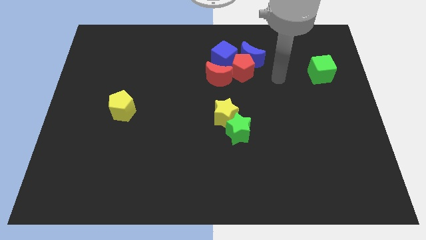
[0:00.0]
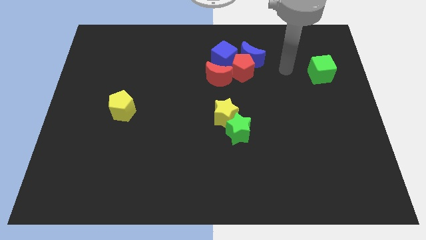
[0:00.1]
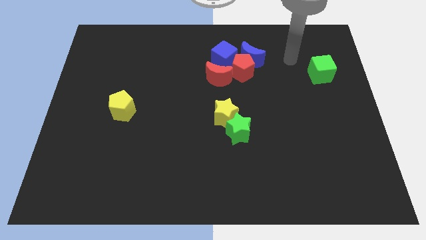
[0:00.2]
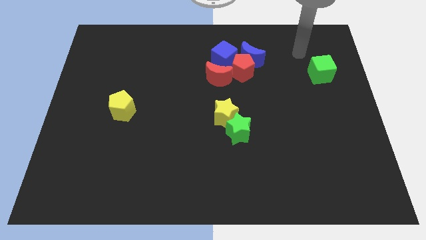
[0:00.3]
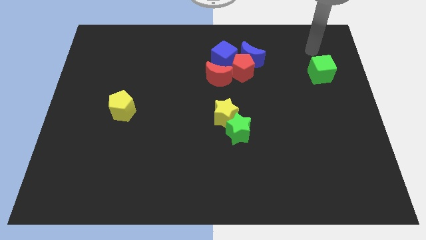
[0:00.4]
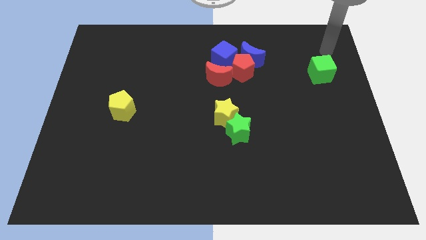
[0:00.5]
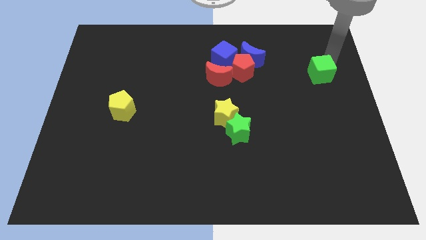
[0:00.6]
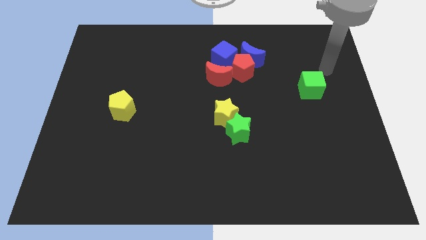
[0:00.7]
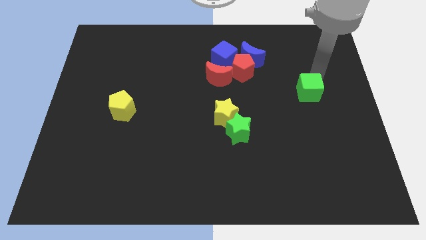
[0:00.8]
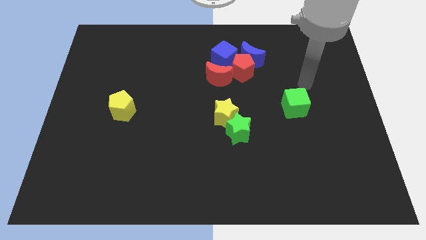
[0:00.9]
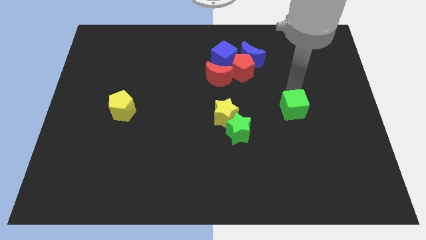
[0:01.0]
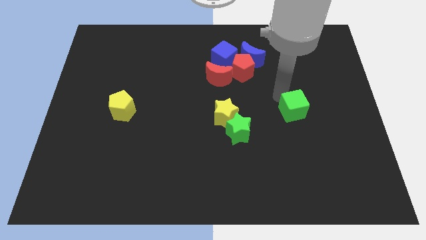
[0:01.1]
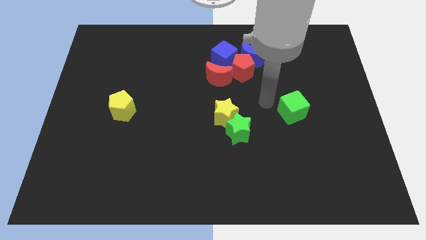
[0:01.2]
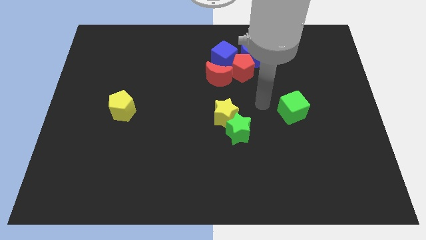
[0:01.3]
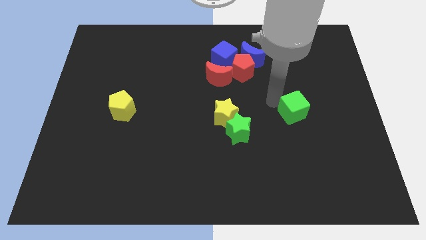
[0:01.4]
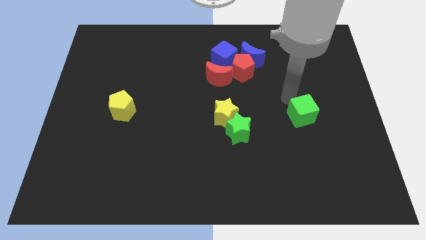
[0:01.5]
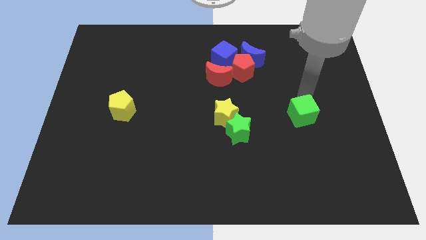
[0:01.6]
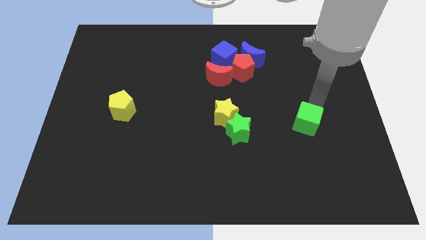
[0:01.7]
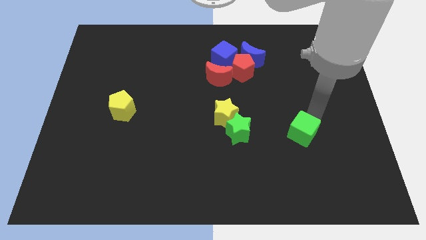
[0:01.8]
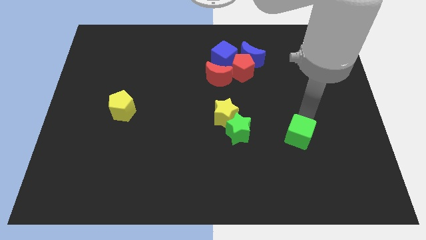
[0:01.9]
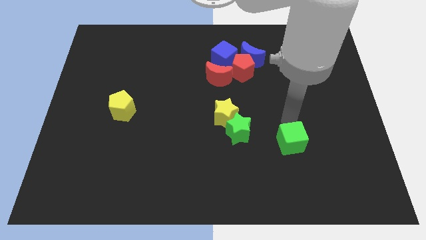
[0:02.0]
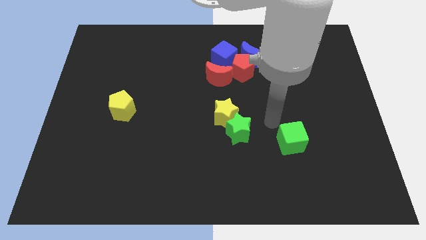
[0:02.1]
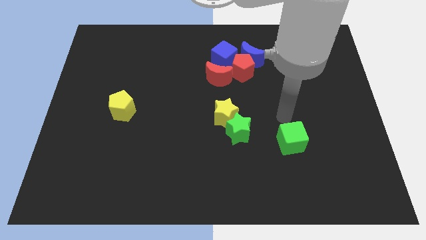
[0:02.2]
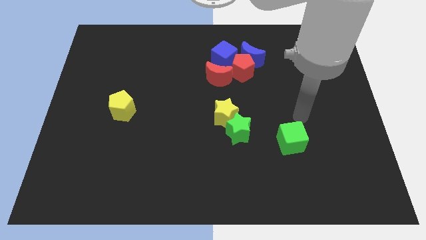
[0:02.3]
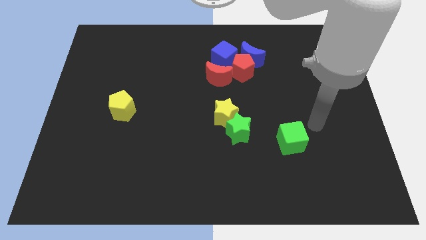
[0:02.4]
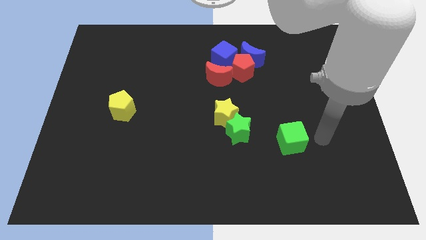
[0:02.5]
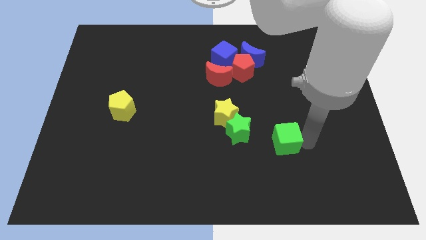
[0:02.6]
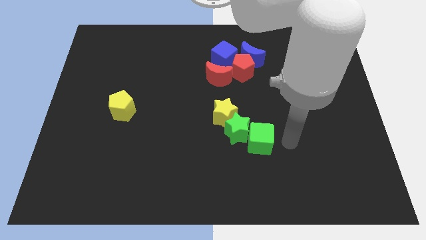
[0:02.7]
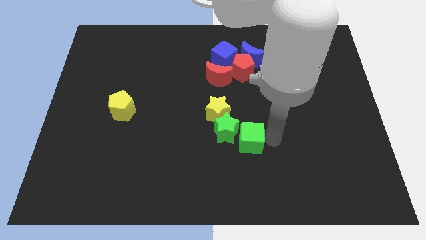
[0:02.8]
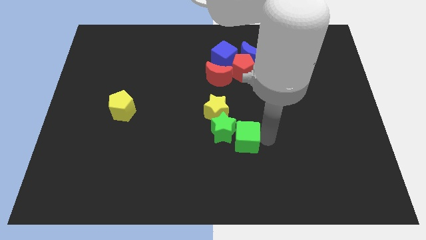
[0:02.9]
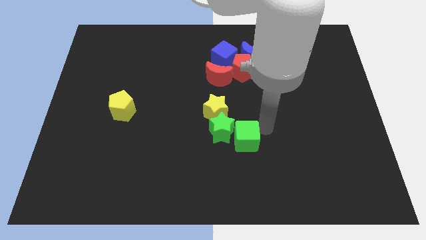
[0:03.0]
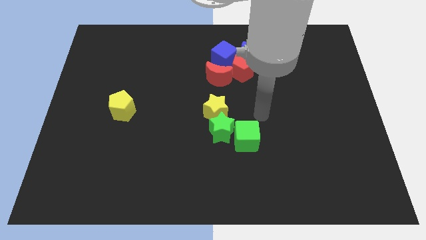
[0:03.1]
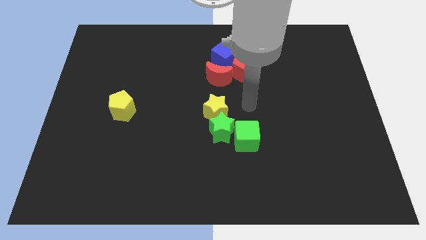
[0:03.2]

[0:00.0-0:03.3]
move the green cube into the right side of the green star

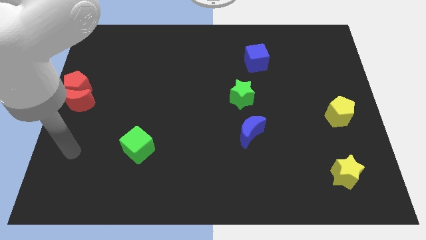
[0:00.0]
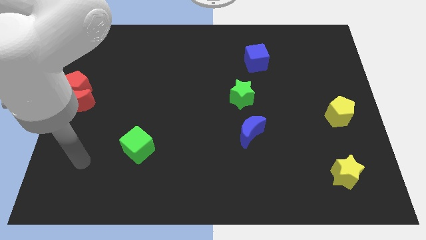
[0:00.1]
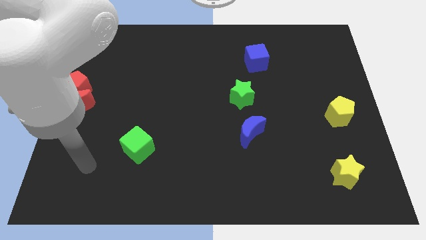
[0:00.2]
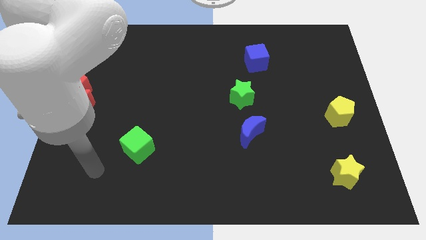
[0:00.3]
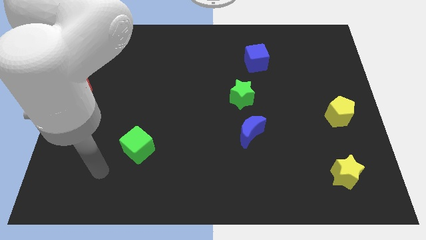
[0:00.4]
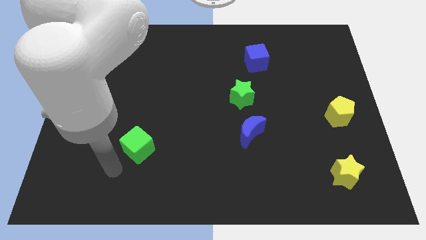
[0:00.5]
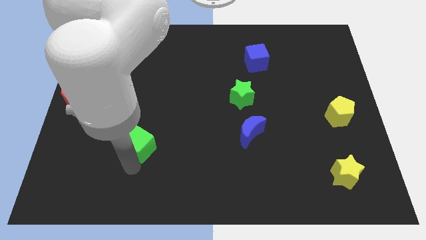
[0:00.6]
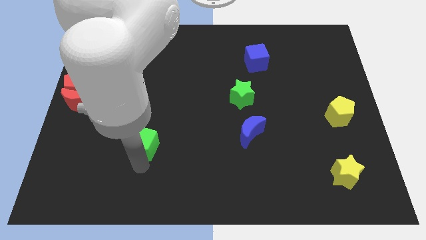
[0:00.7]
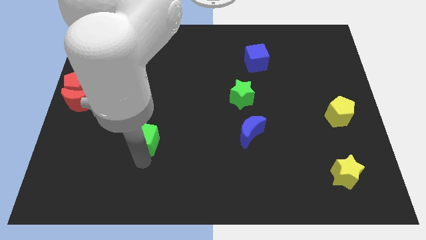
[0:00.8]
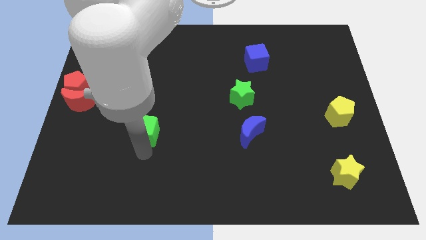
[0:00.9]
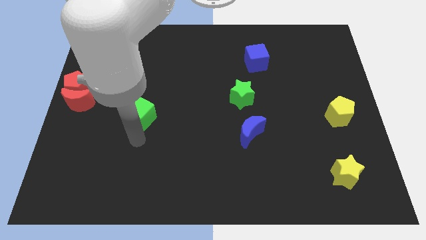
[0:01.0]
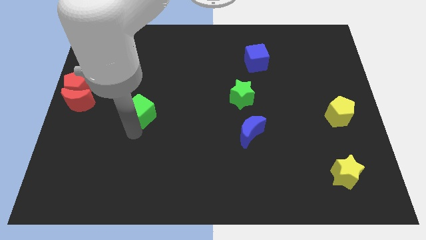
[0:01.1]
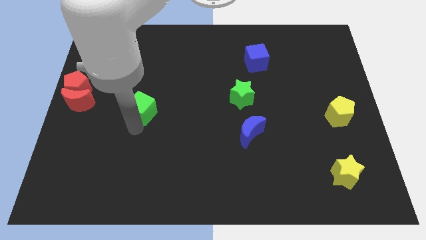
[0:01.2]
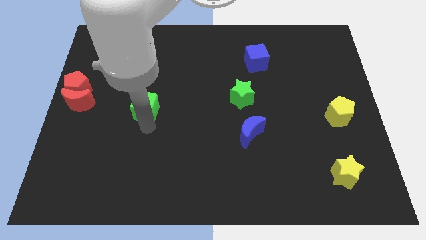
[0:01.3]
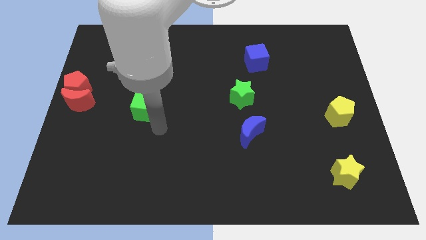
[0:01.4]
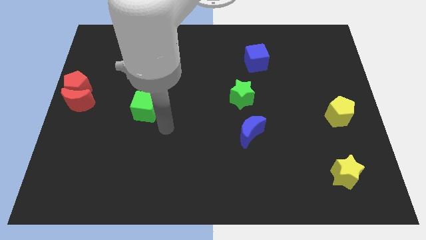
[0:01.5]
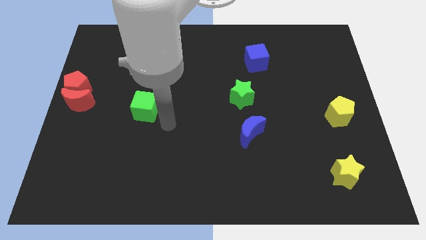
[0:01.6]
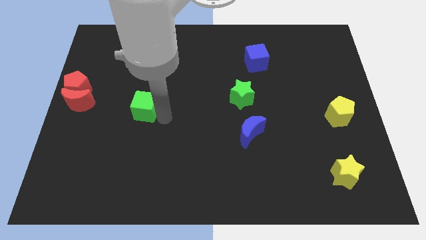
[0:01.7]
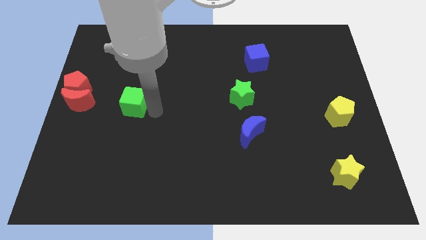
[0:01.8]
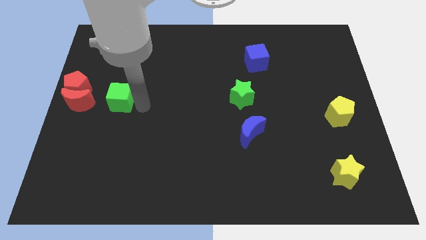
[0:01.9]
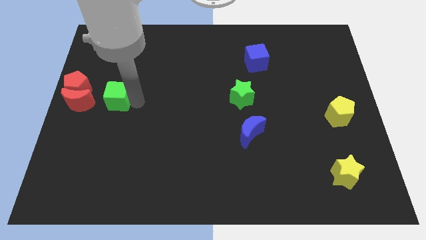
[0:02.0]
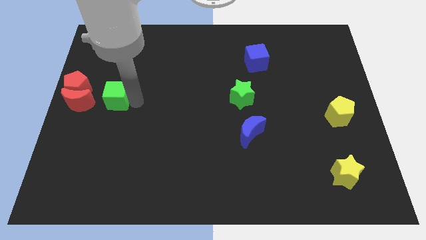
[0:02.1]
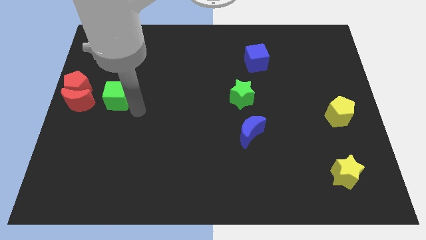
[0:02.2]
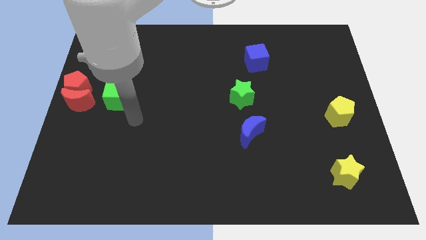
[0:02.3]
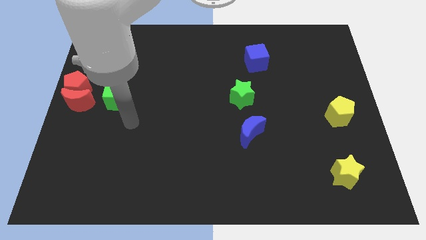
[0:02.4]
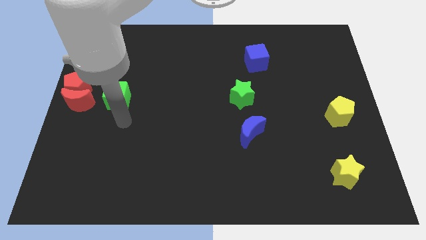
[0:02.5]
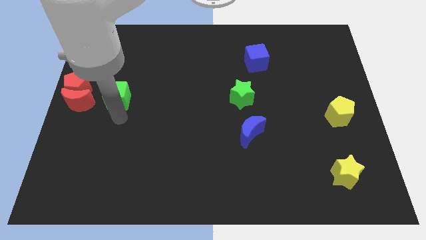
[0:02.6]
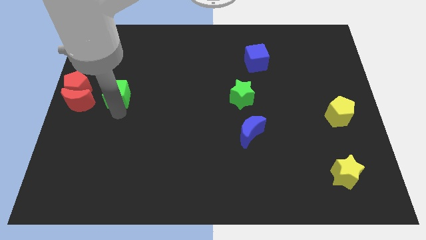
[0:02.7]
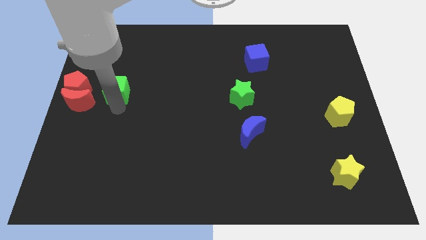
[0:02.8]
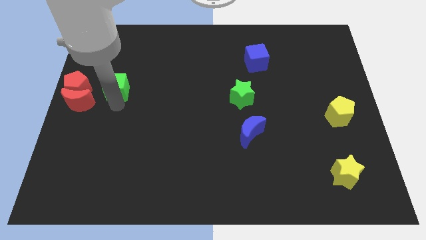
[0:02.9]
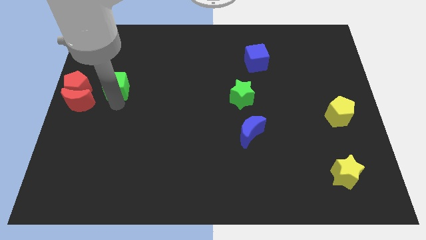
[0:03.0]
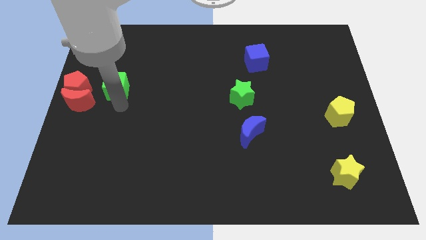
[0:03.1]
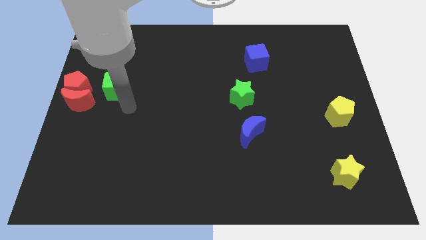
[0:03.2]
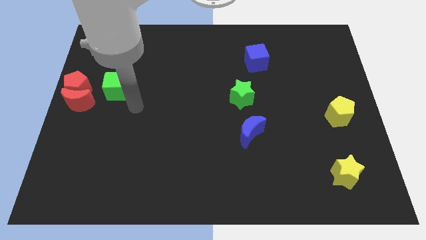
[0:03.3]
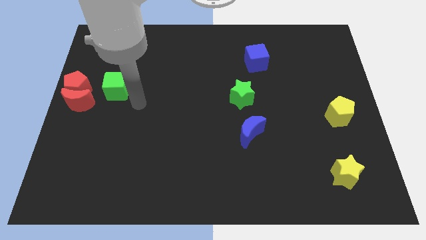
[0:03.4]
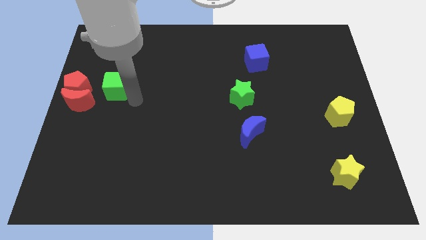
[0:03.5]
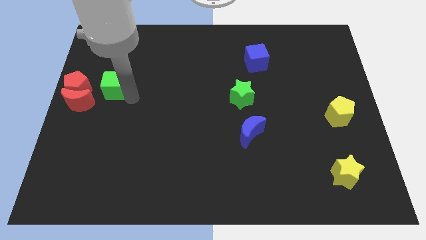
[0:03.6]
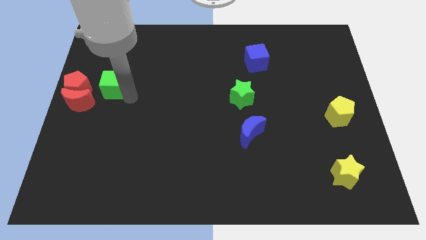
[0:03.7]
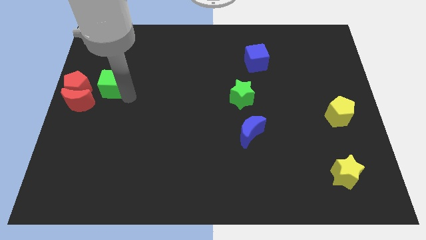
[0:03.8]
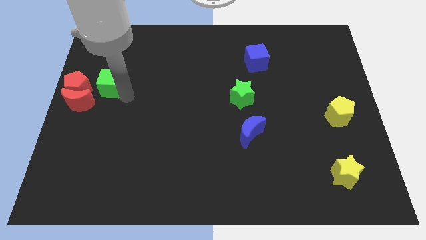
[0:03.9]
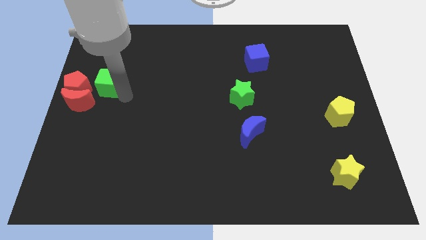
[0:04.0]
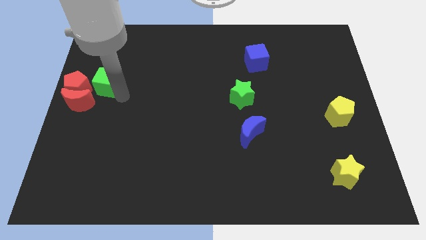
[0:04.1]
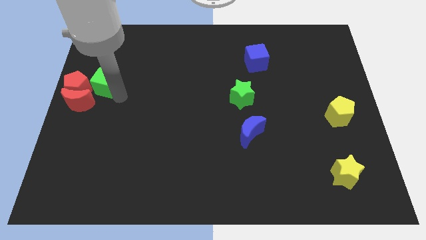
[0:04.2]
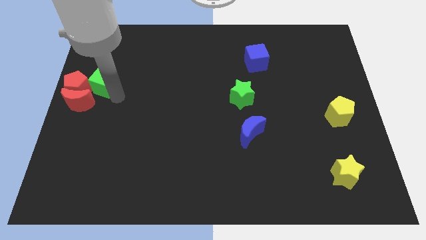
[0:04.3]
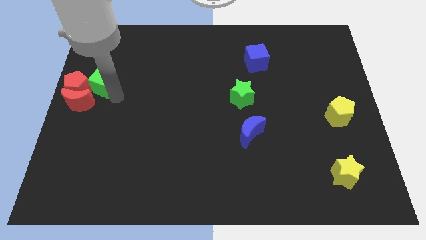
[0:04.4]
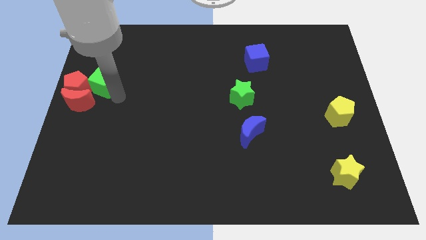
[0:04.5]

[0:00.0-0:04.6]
move the green cube into the right side of the red pentagon

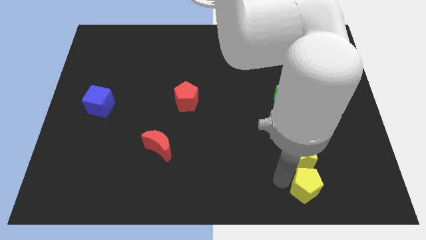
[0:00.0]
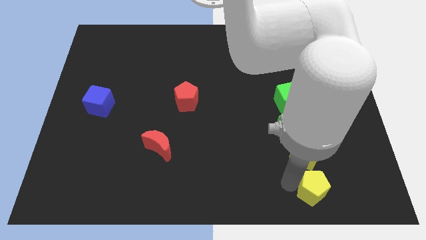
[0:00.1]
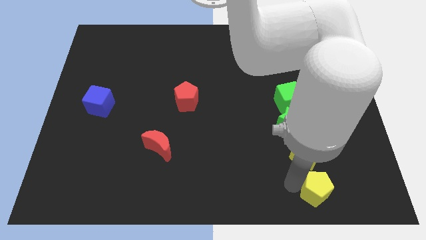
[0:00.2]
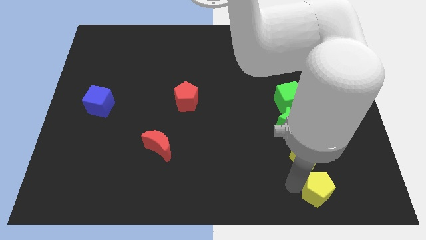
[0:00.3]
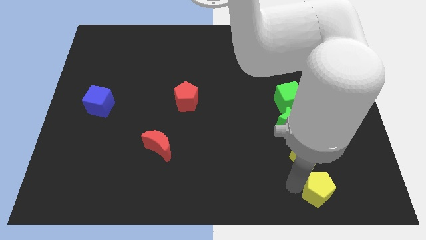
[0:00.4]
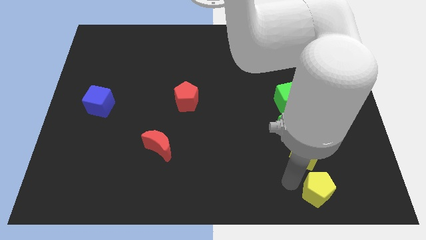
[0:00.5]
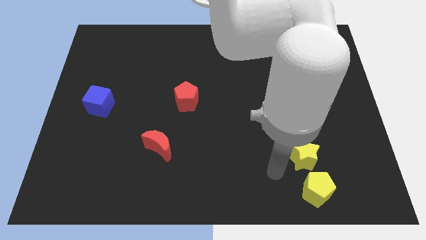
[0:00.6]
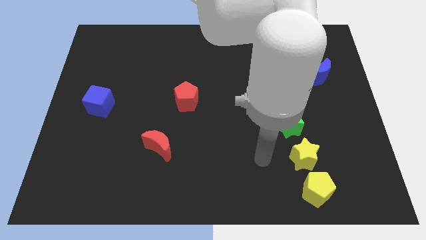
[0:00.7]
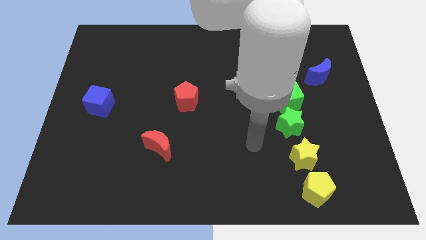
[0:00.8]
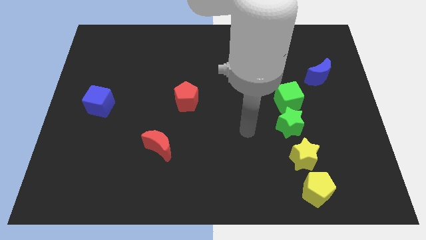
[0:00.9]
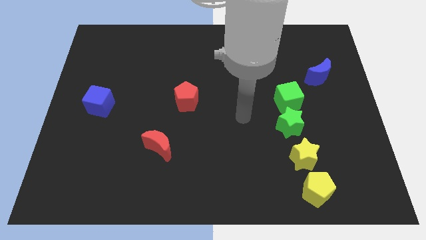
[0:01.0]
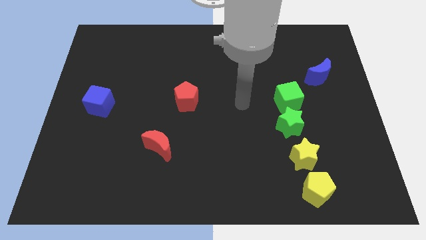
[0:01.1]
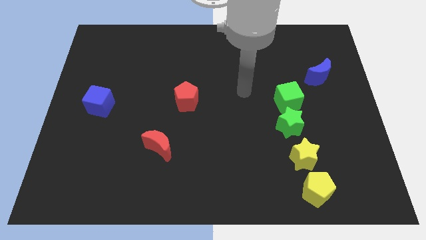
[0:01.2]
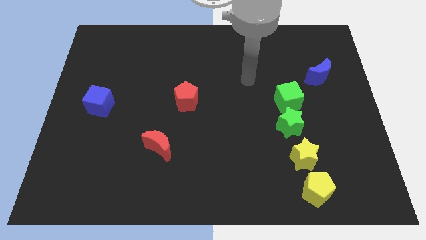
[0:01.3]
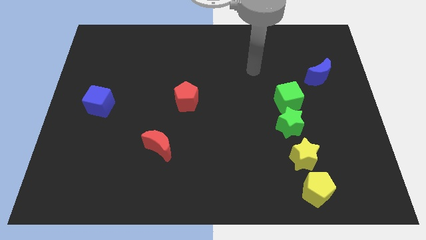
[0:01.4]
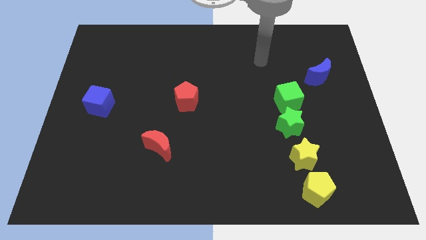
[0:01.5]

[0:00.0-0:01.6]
move away from yellow pentagon
